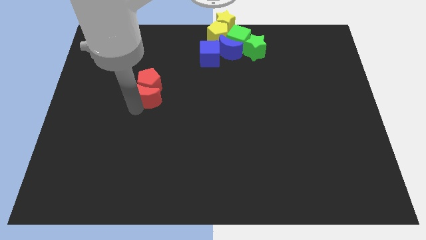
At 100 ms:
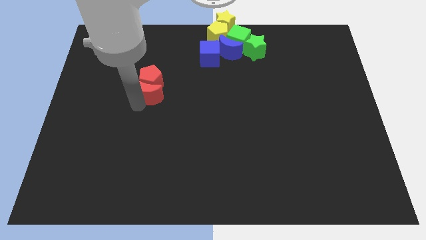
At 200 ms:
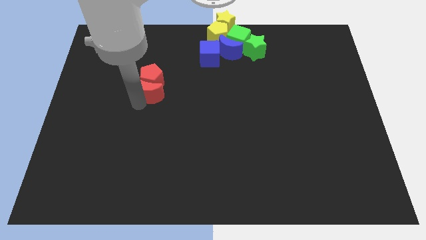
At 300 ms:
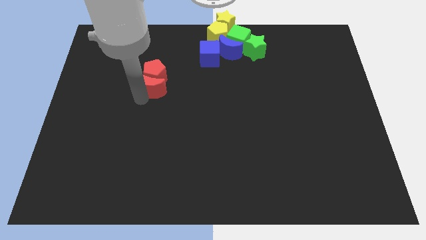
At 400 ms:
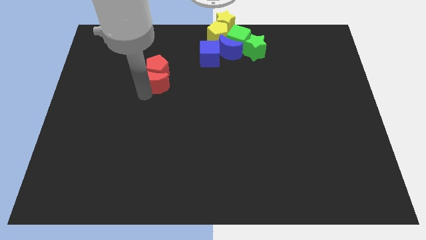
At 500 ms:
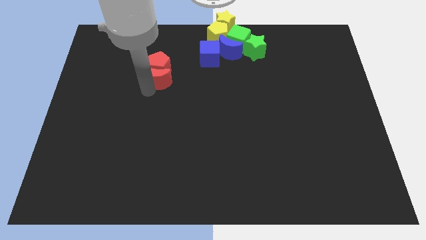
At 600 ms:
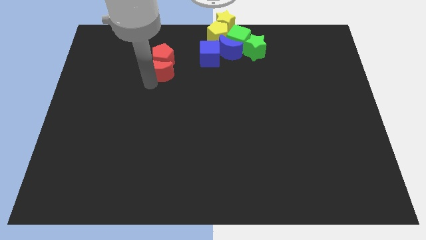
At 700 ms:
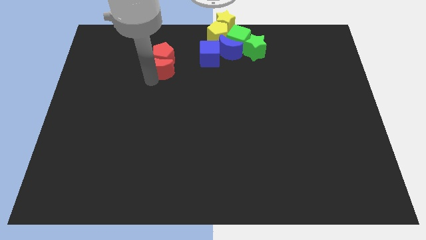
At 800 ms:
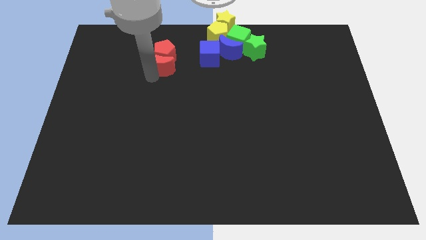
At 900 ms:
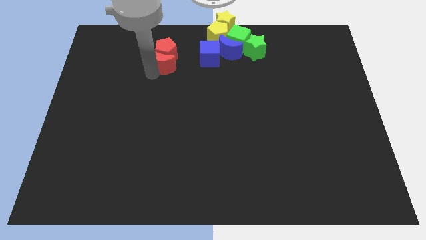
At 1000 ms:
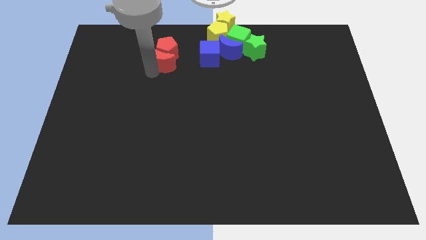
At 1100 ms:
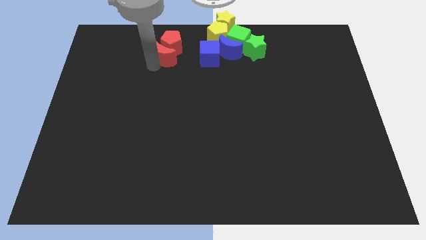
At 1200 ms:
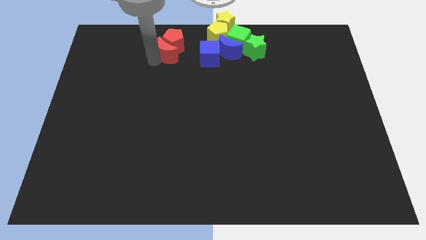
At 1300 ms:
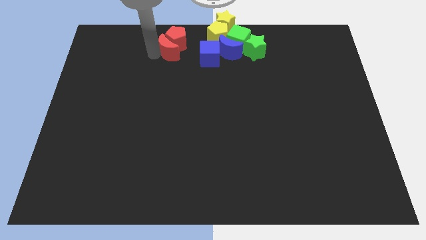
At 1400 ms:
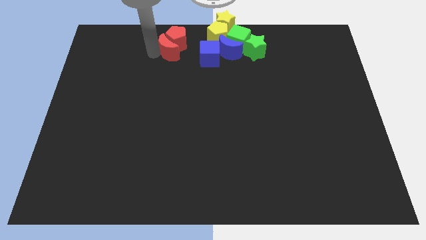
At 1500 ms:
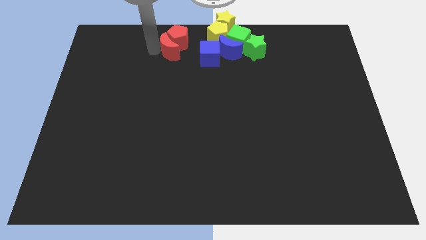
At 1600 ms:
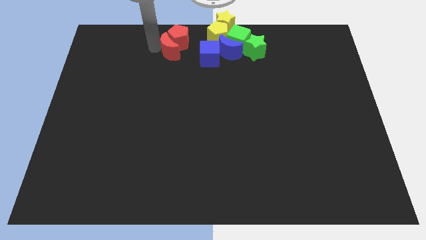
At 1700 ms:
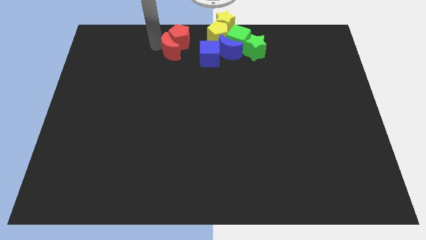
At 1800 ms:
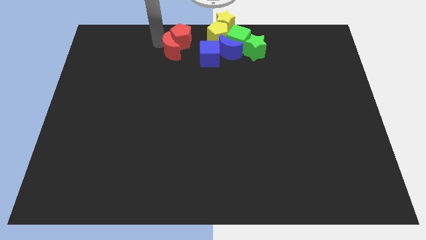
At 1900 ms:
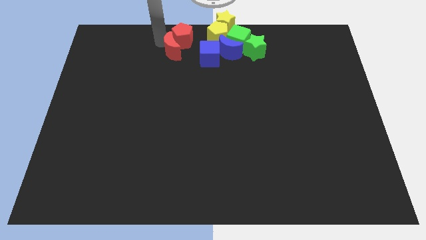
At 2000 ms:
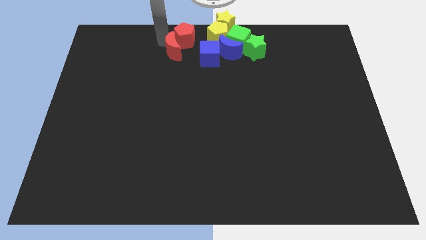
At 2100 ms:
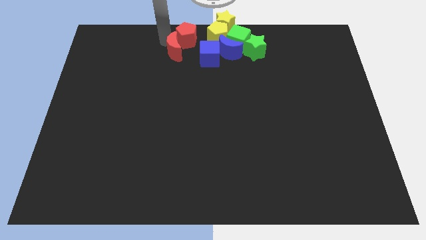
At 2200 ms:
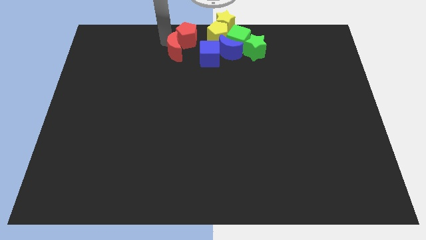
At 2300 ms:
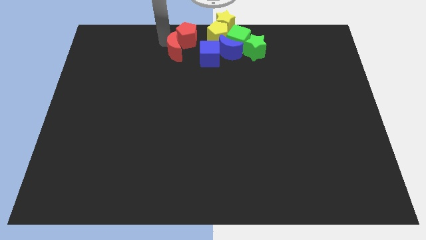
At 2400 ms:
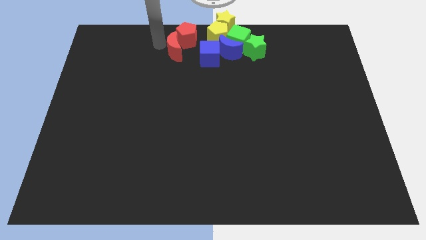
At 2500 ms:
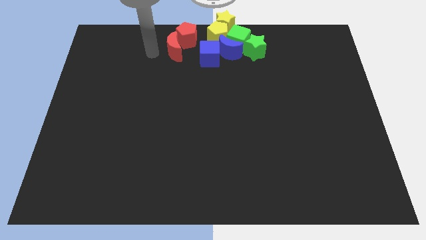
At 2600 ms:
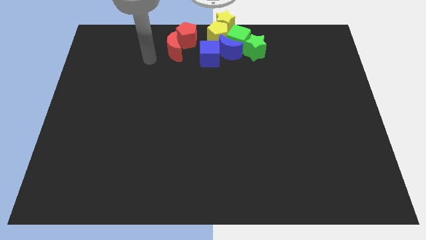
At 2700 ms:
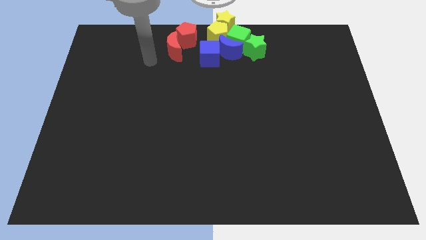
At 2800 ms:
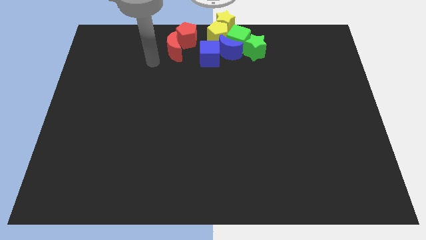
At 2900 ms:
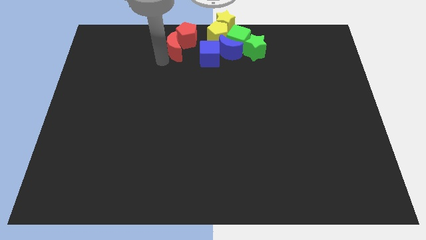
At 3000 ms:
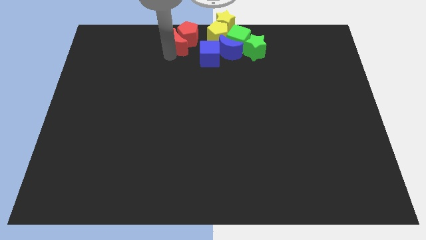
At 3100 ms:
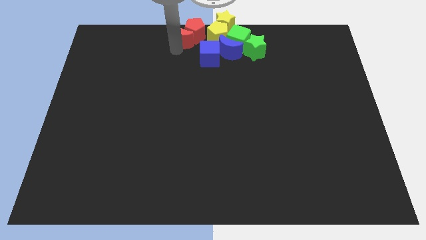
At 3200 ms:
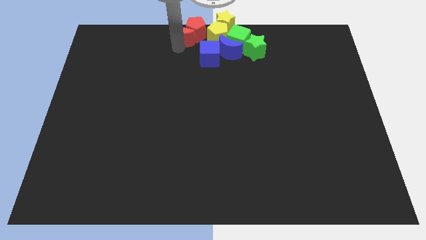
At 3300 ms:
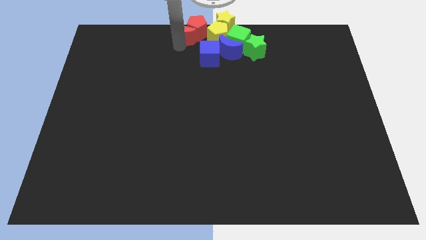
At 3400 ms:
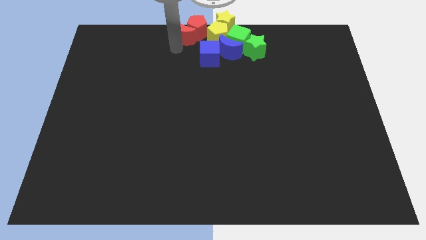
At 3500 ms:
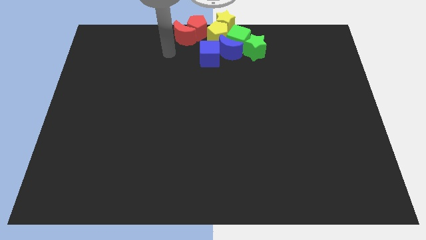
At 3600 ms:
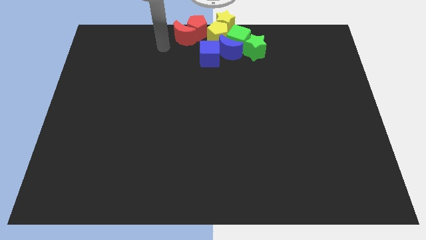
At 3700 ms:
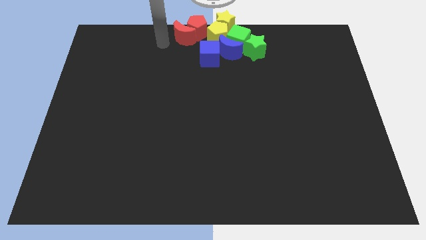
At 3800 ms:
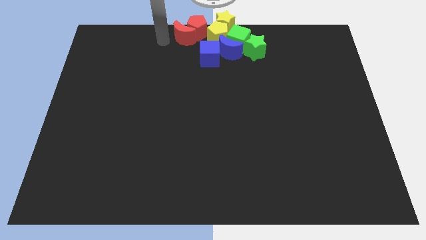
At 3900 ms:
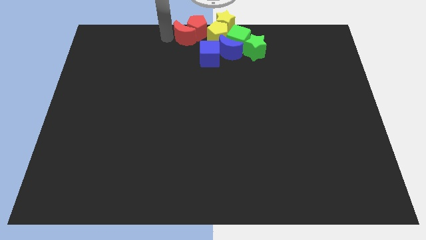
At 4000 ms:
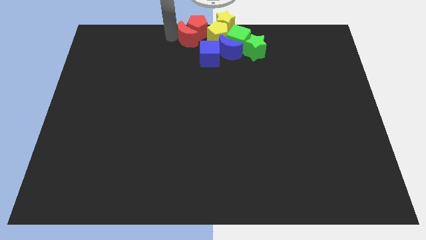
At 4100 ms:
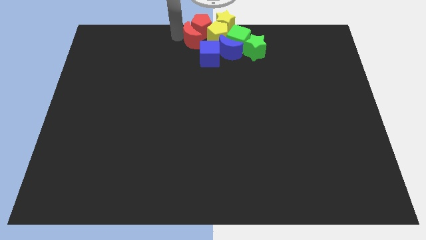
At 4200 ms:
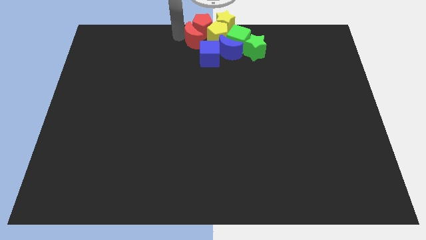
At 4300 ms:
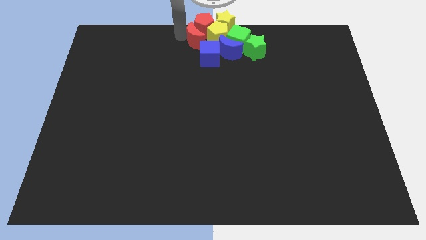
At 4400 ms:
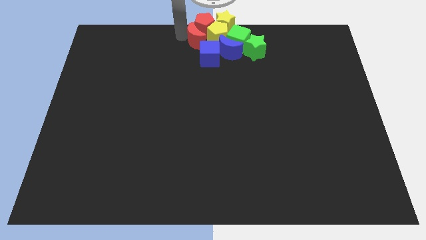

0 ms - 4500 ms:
move the red blocks into the yellow blocks

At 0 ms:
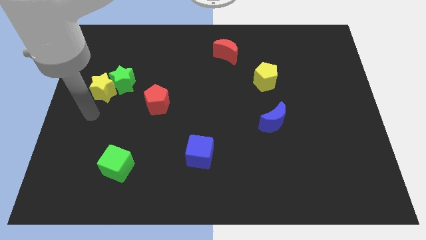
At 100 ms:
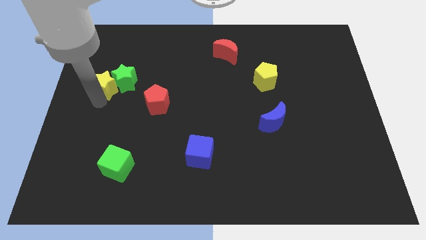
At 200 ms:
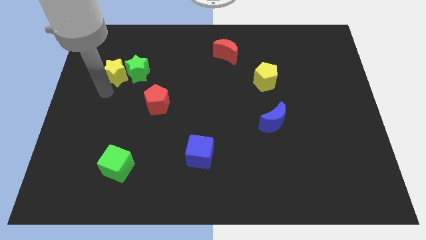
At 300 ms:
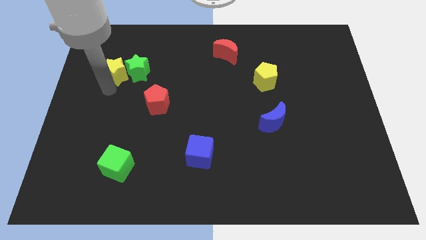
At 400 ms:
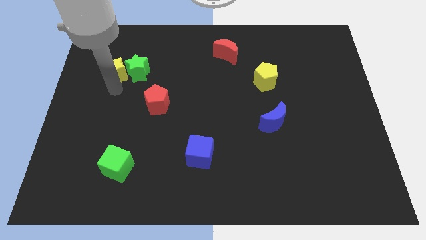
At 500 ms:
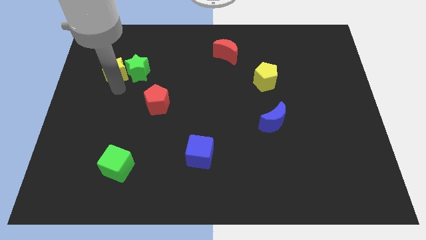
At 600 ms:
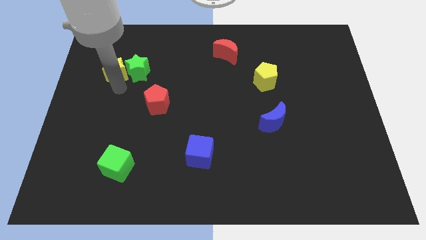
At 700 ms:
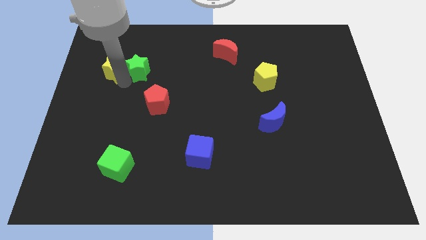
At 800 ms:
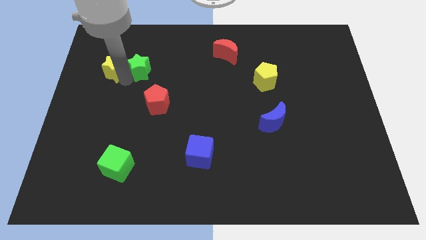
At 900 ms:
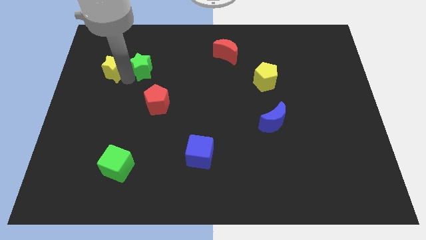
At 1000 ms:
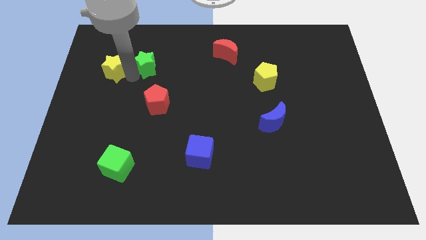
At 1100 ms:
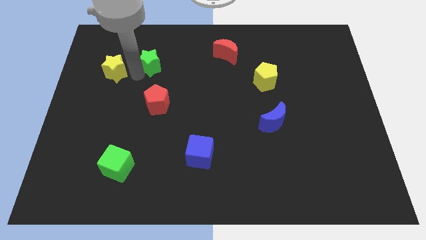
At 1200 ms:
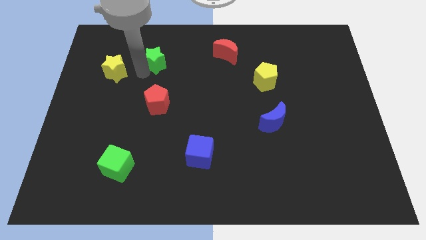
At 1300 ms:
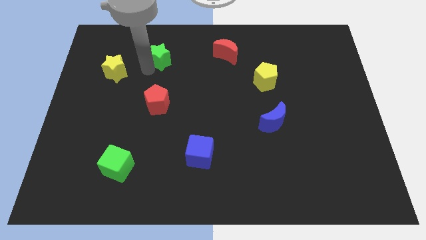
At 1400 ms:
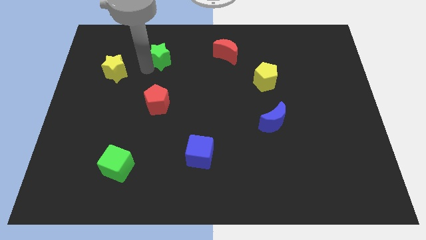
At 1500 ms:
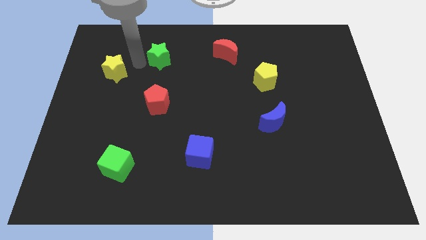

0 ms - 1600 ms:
move the green star above the red pentagon

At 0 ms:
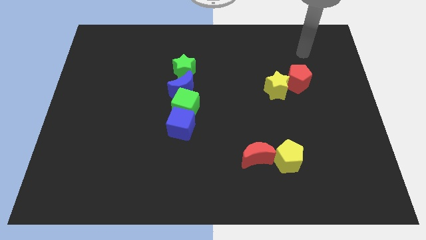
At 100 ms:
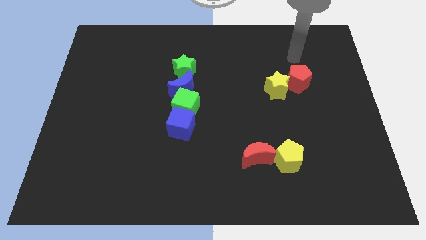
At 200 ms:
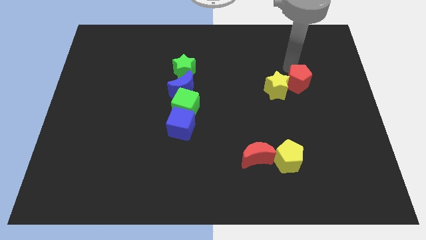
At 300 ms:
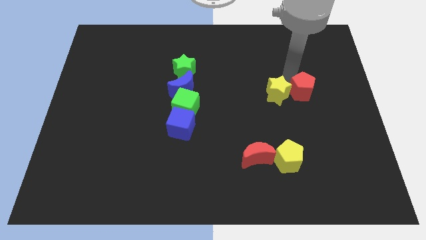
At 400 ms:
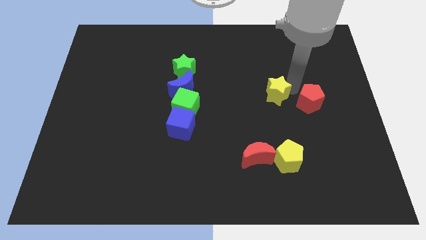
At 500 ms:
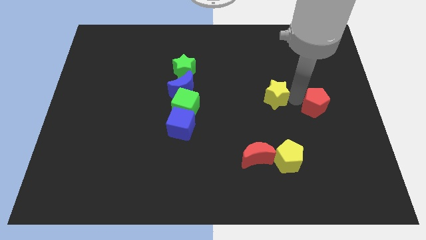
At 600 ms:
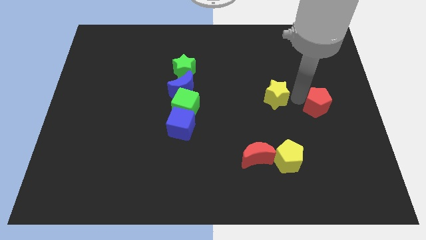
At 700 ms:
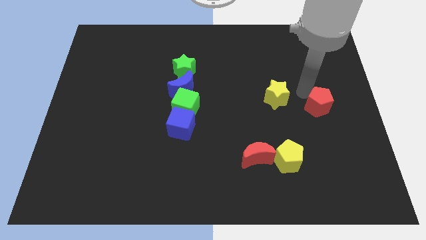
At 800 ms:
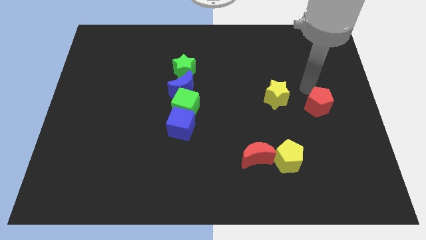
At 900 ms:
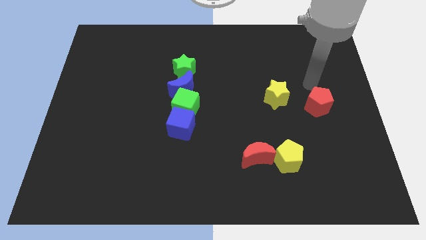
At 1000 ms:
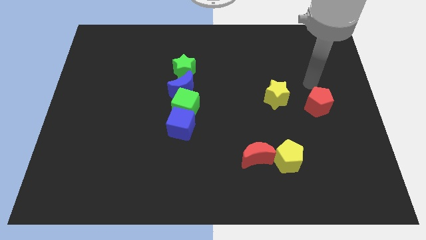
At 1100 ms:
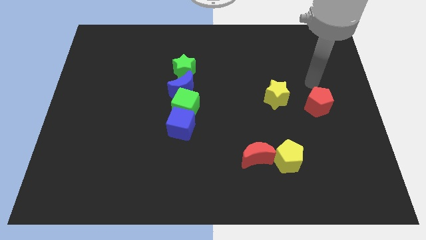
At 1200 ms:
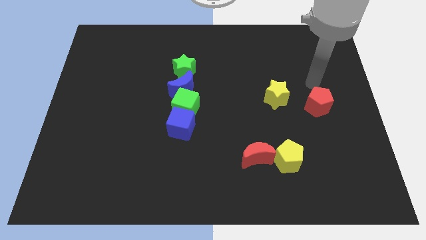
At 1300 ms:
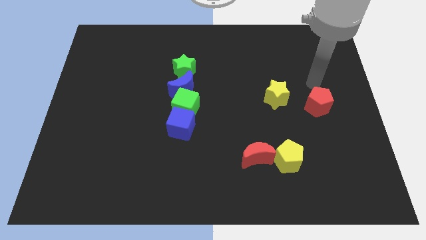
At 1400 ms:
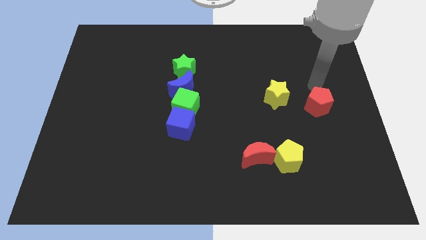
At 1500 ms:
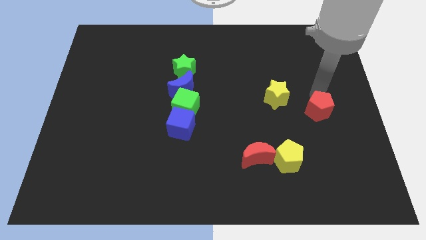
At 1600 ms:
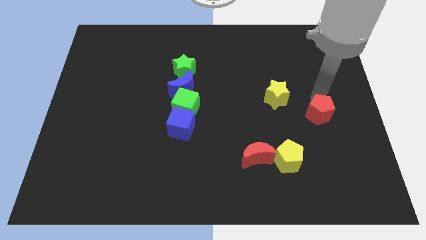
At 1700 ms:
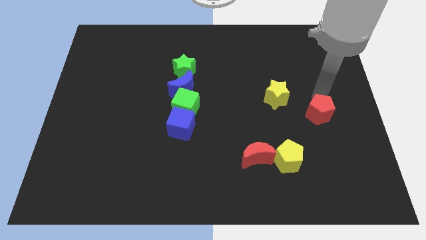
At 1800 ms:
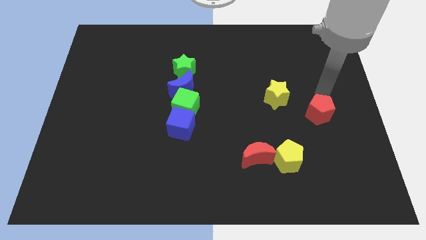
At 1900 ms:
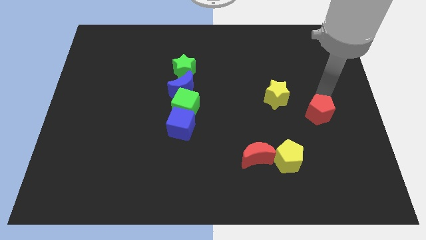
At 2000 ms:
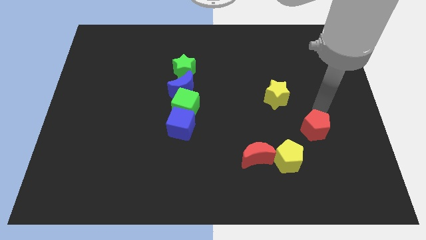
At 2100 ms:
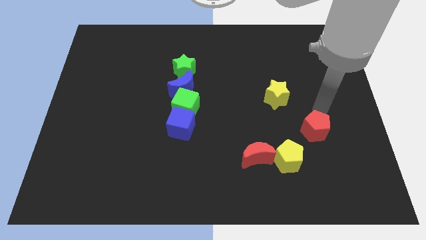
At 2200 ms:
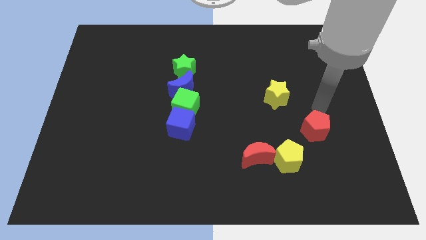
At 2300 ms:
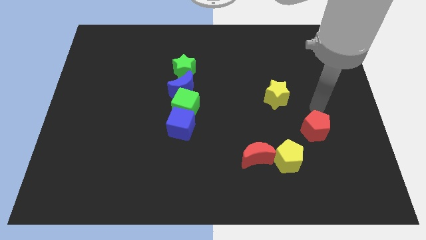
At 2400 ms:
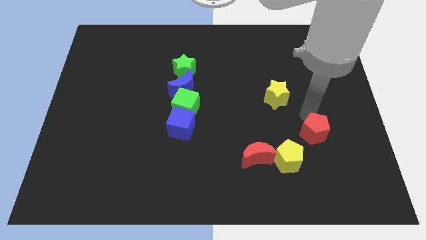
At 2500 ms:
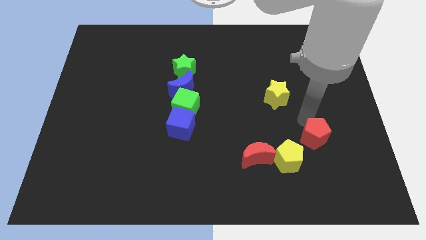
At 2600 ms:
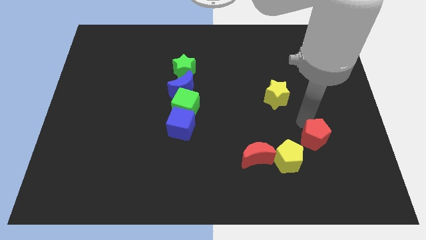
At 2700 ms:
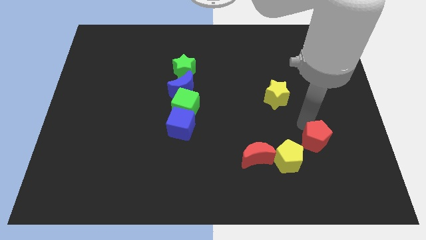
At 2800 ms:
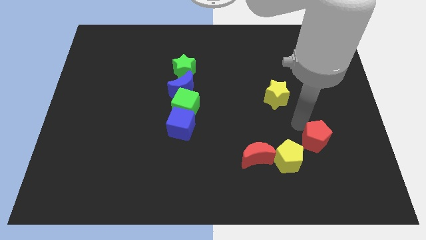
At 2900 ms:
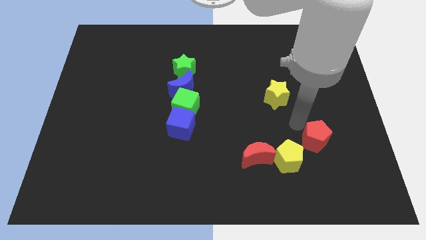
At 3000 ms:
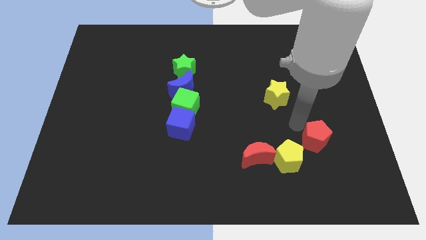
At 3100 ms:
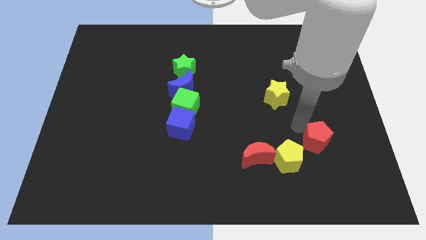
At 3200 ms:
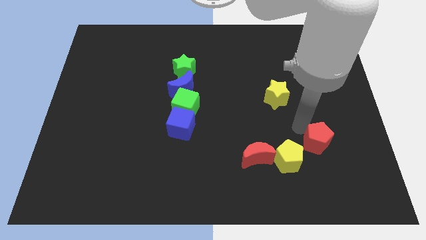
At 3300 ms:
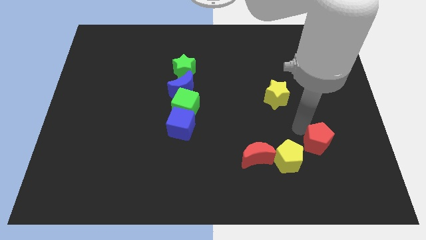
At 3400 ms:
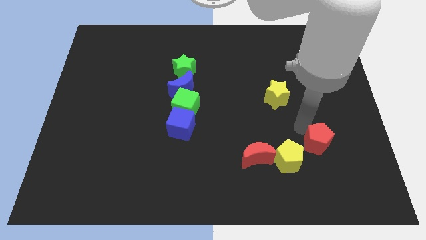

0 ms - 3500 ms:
move the red pentagon away from the yellow star
